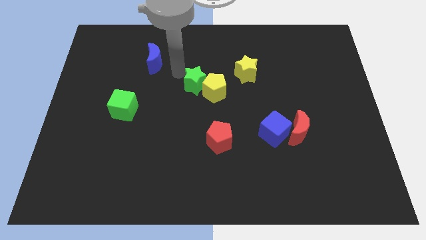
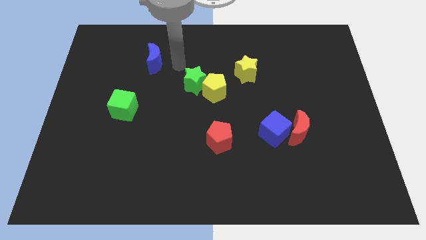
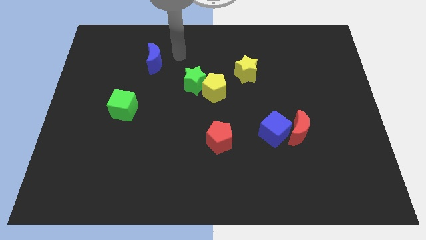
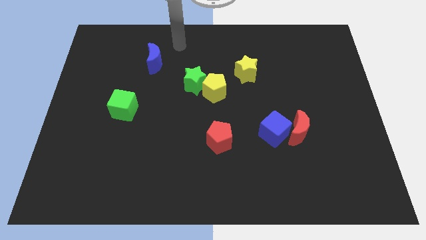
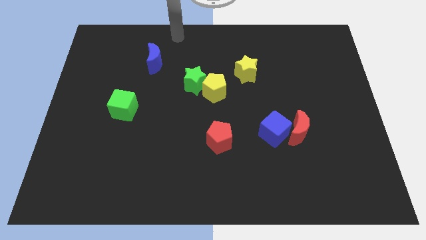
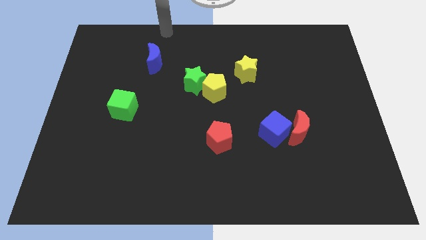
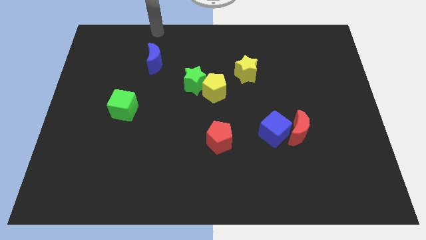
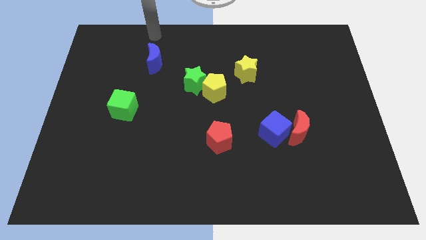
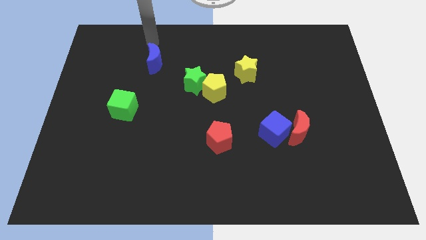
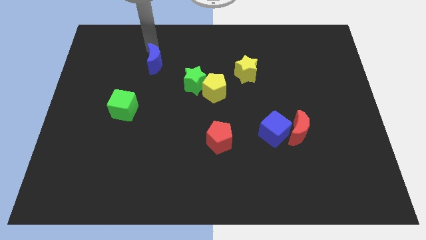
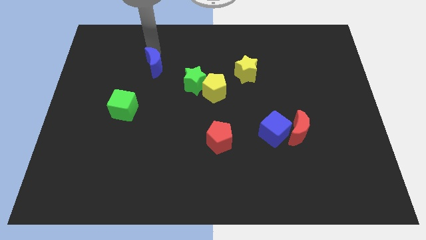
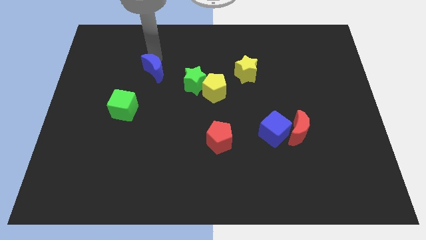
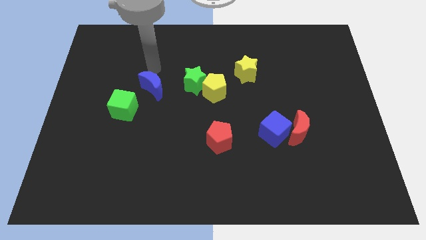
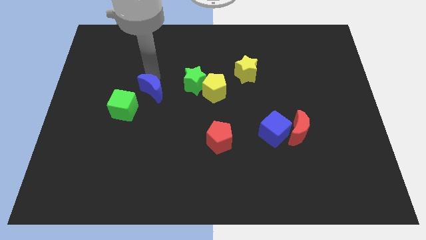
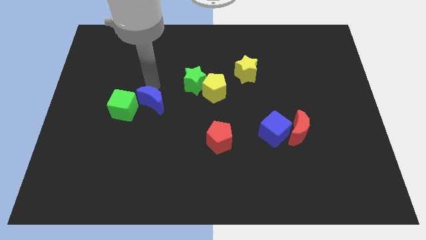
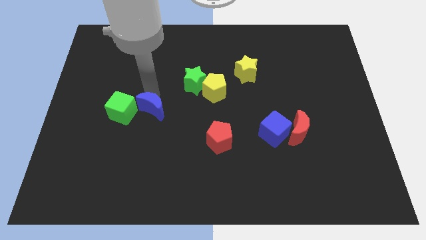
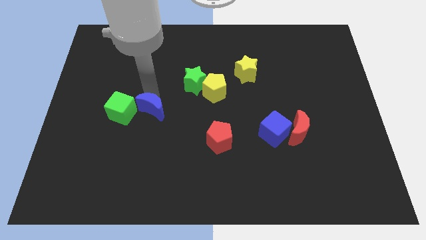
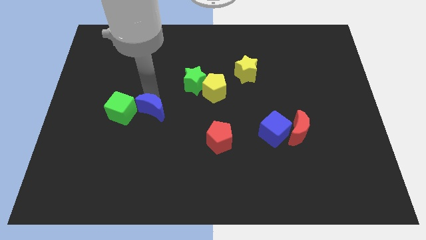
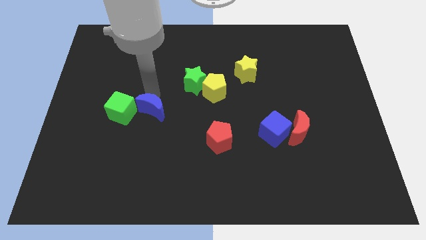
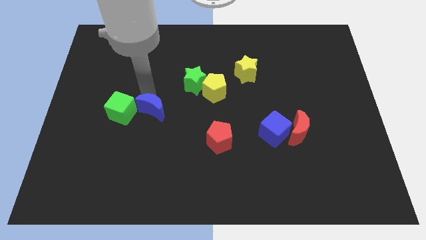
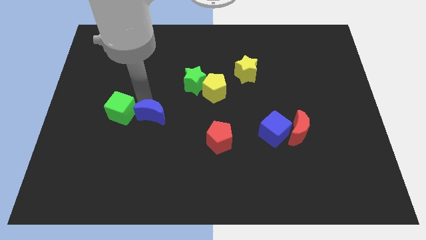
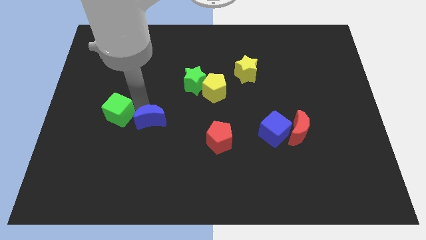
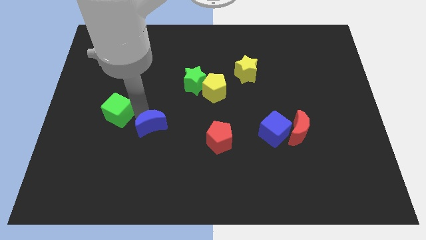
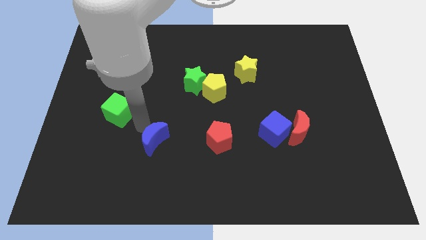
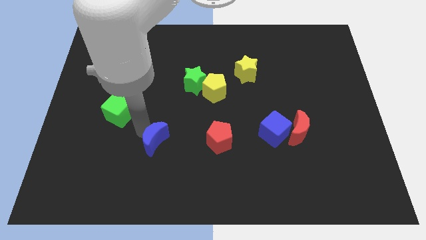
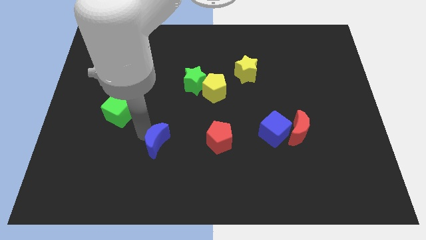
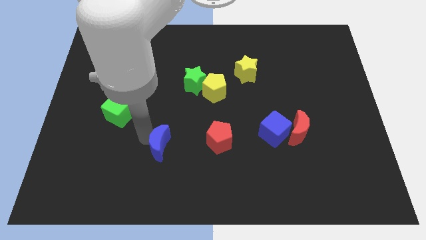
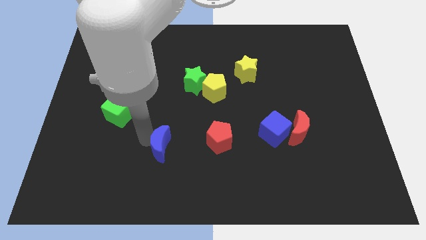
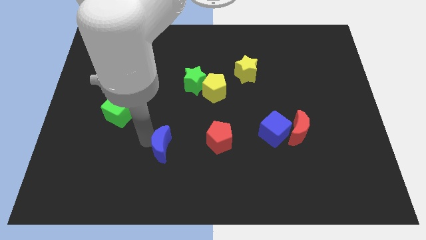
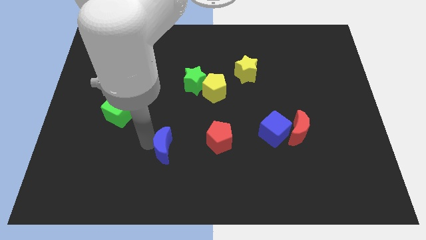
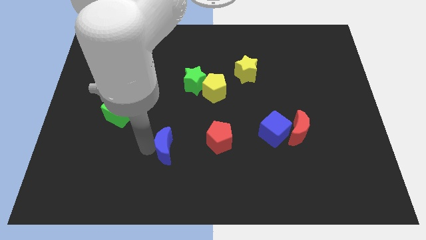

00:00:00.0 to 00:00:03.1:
slide the blue moon diagonally bottom left to the yellow pentagon

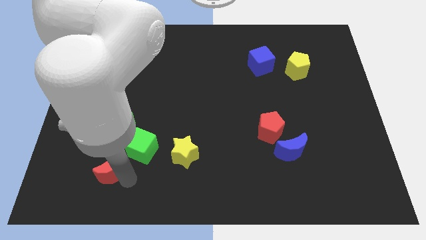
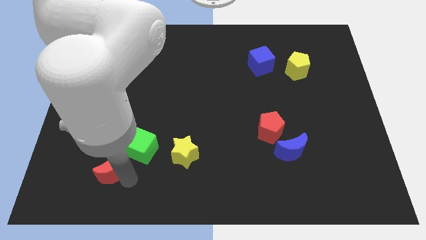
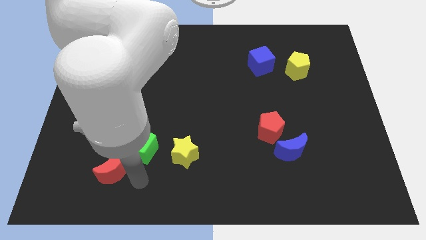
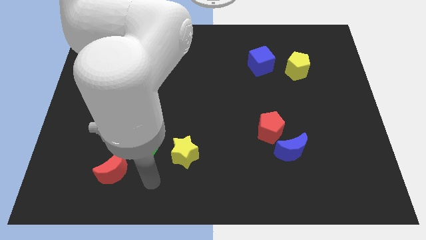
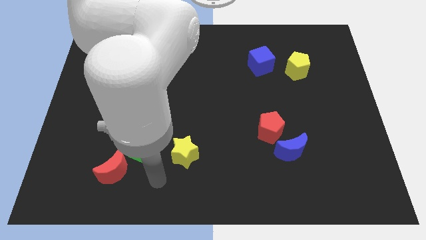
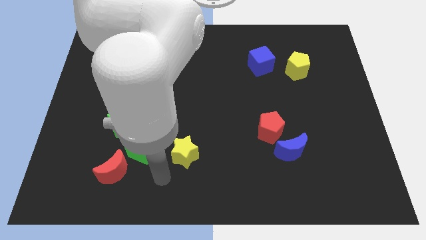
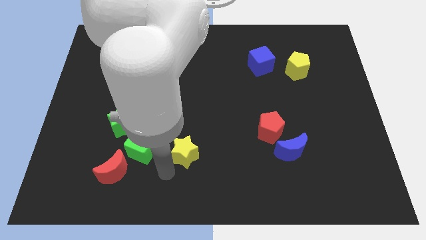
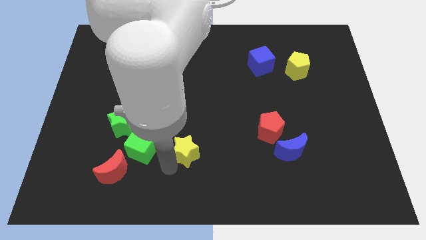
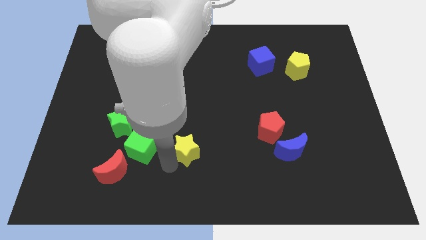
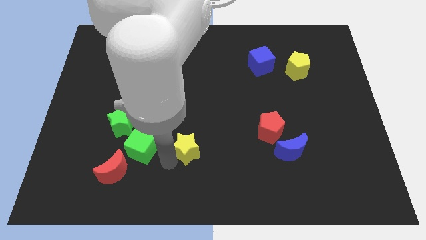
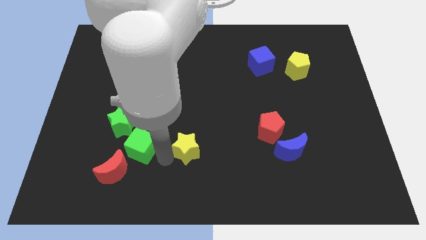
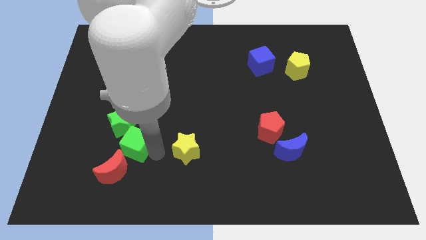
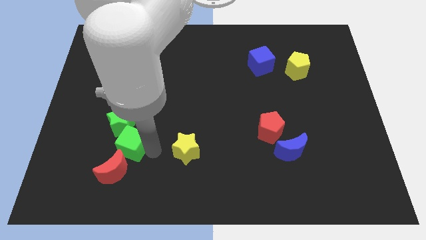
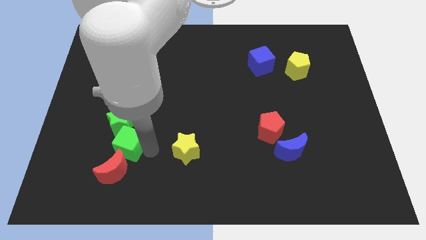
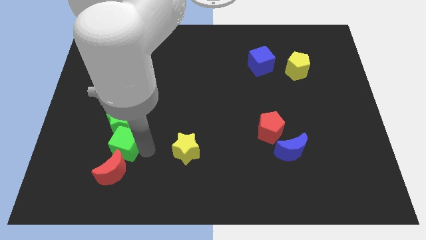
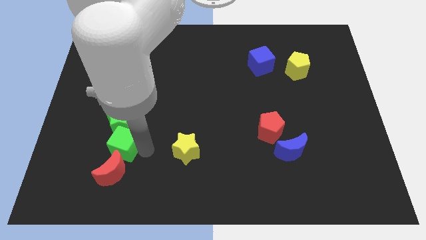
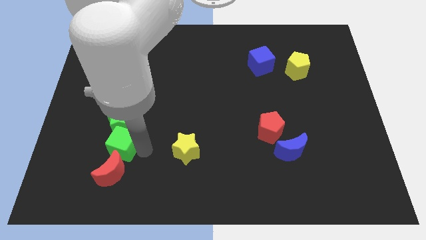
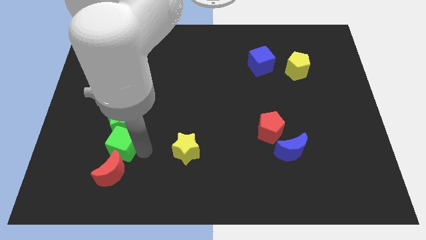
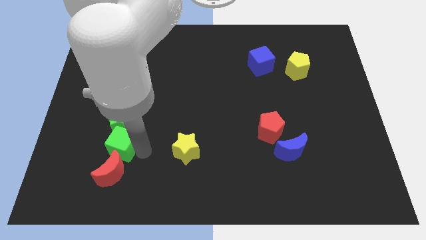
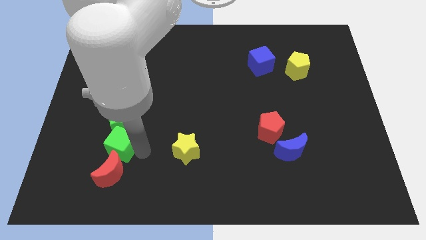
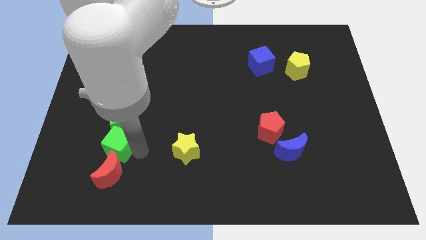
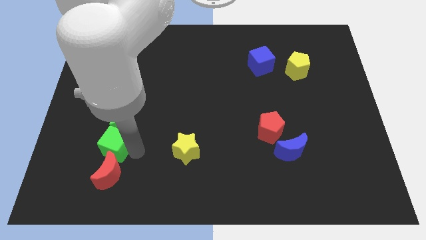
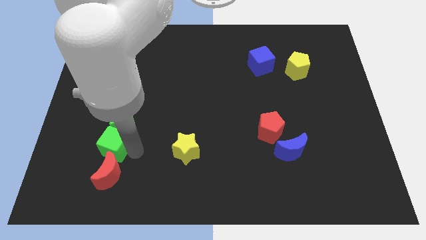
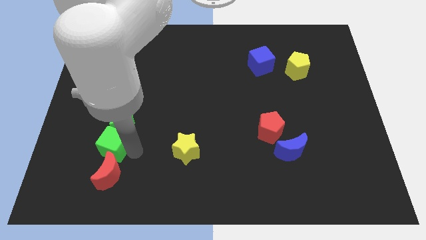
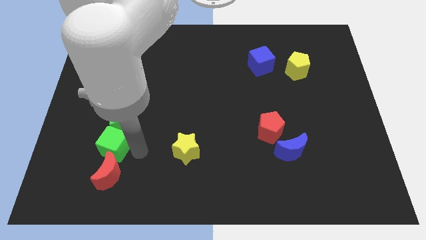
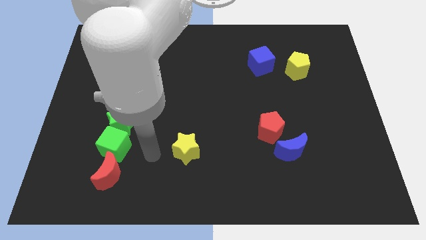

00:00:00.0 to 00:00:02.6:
place the green cube in between red crescent and the green star

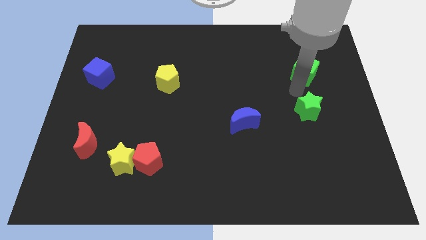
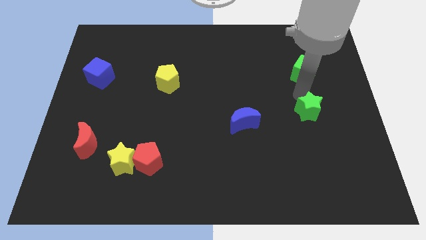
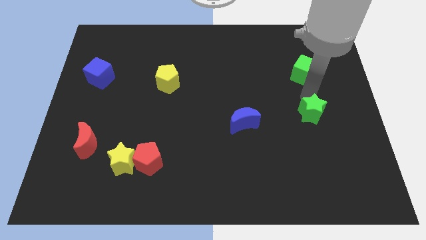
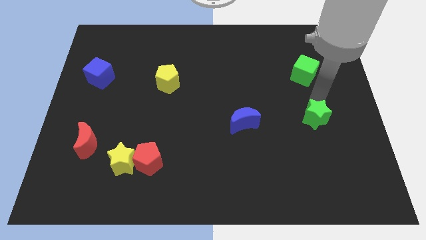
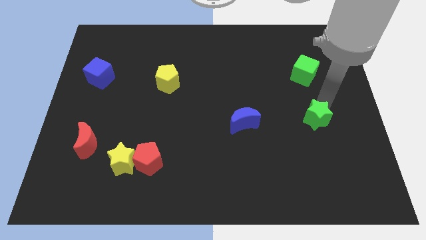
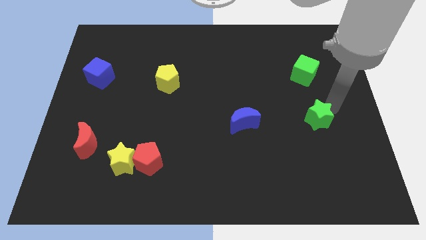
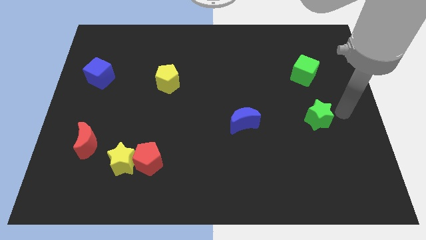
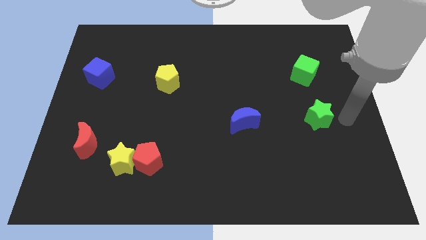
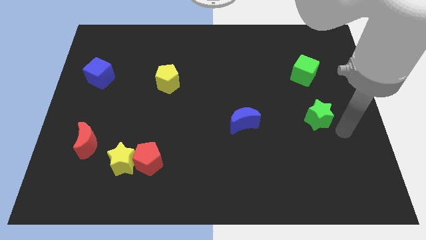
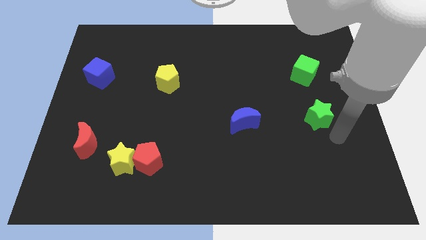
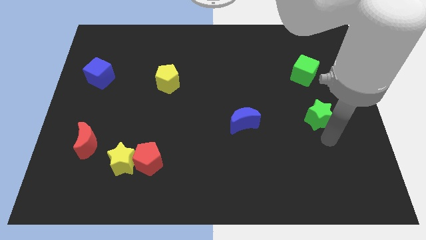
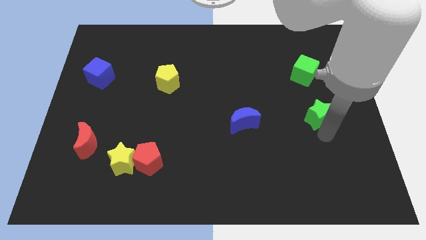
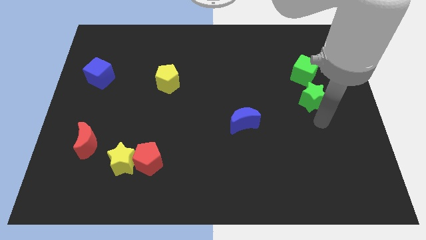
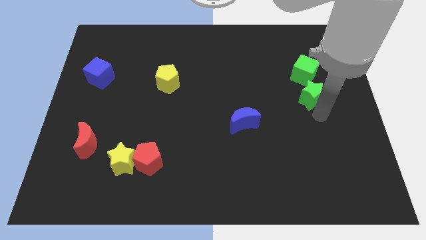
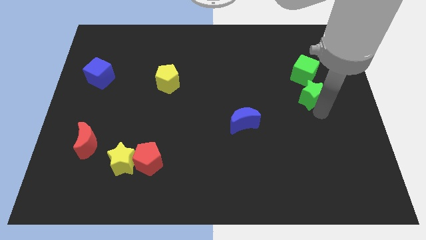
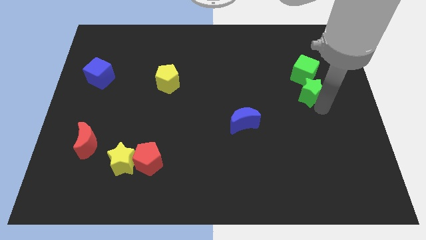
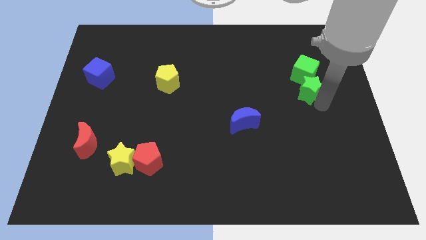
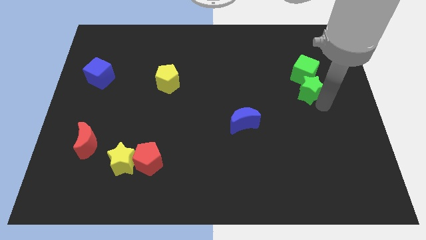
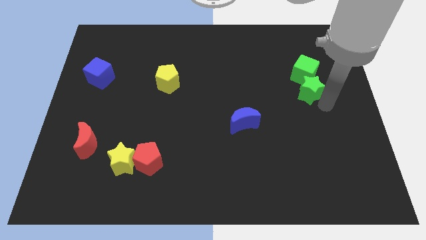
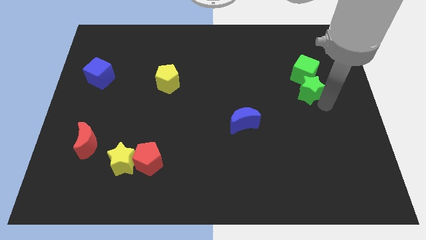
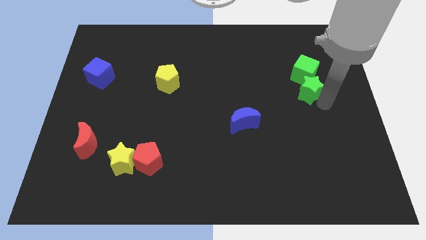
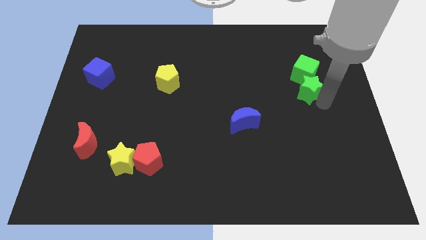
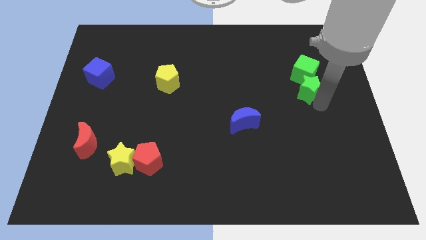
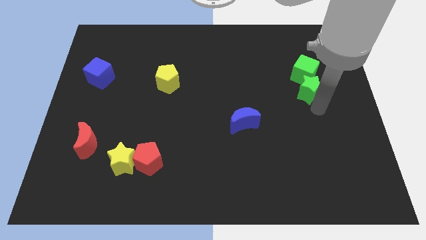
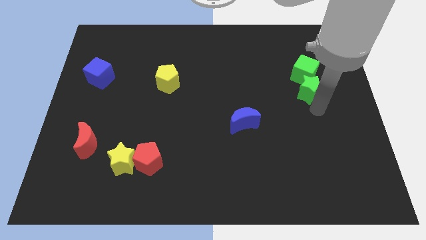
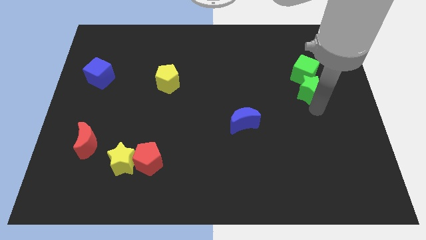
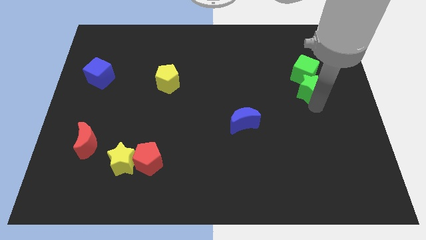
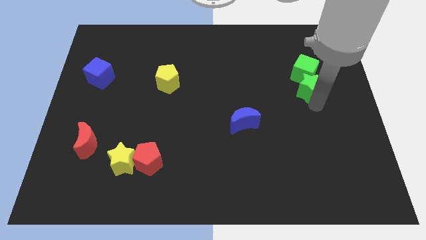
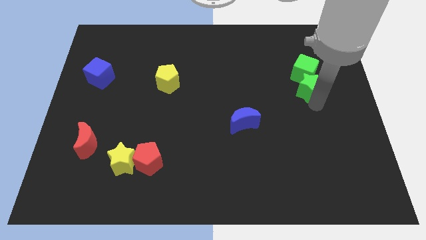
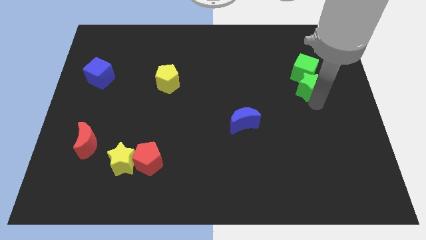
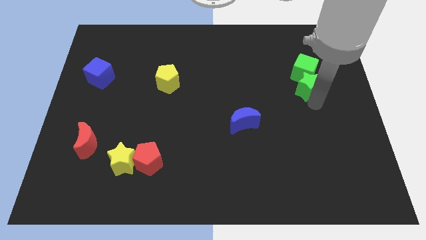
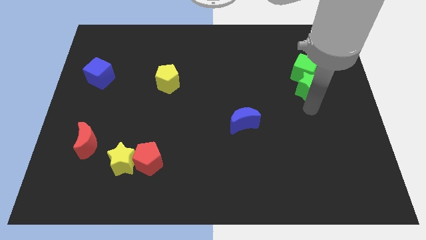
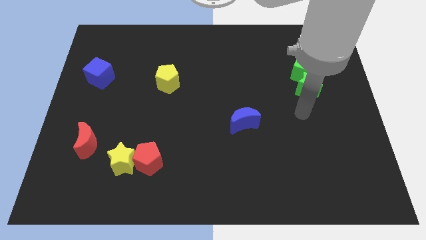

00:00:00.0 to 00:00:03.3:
push the green star into the green cube
